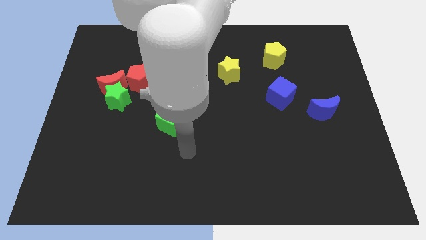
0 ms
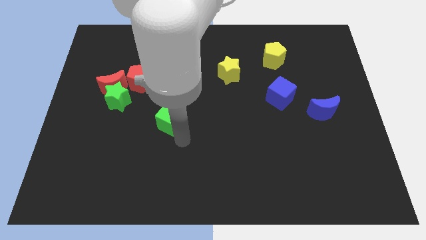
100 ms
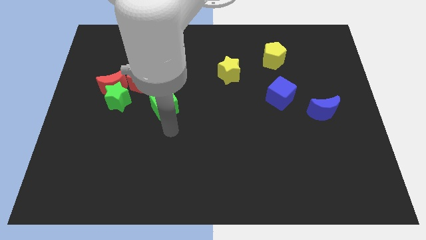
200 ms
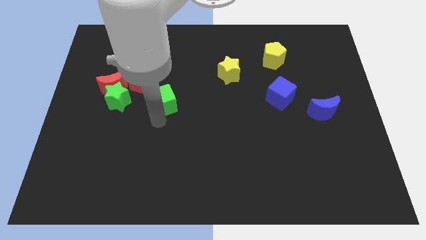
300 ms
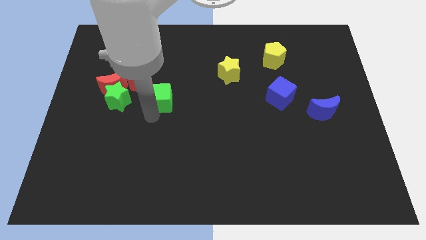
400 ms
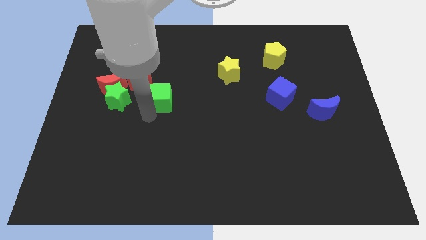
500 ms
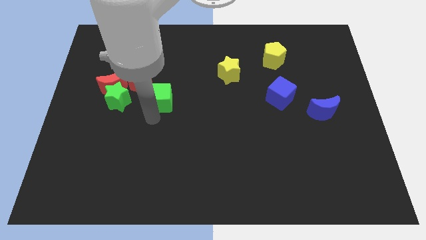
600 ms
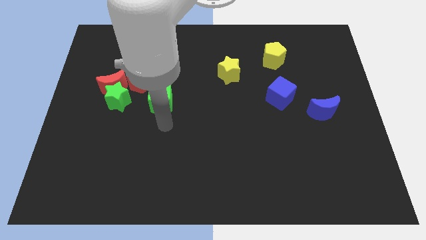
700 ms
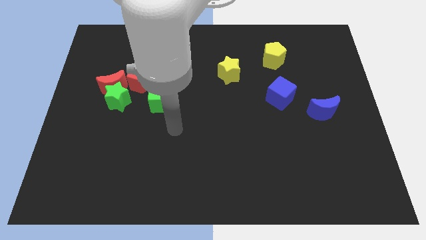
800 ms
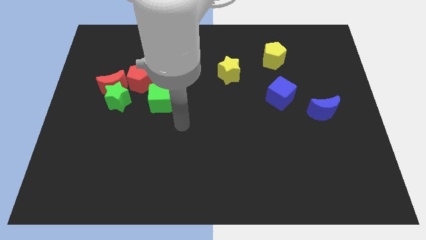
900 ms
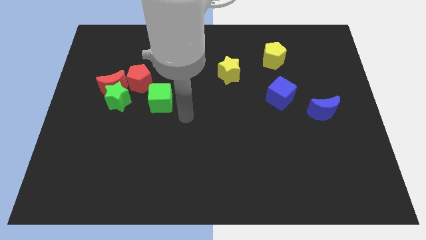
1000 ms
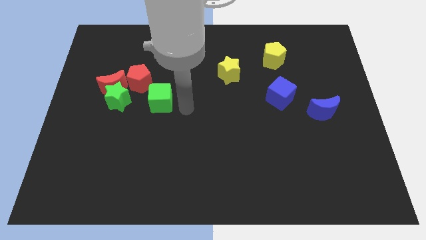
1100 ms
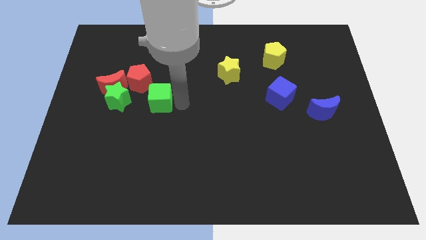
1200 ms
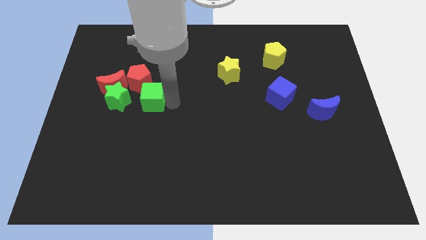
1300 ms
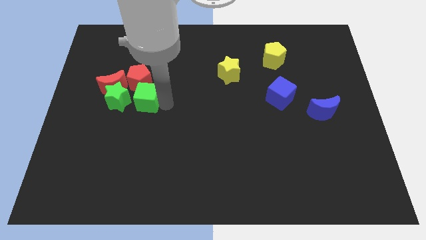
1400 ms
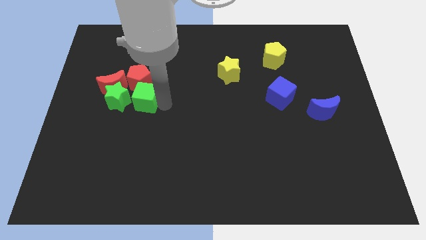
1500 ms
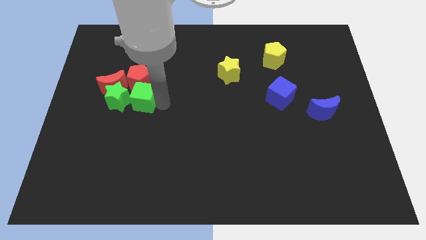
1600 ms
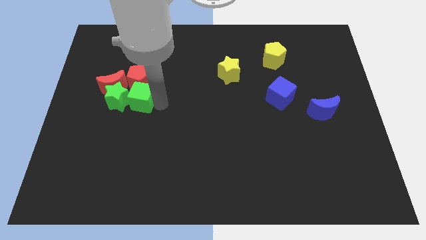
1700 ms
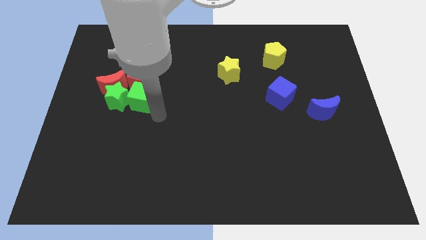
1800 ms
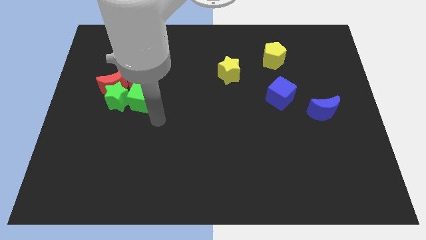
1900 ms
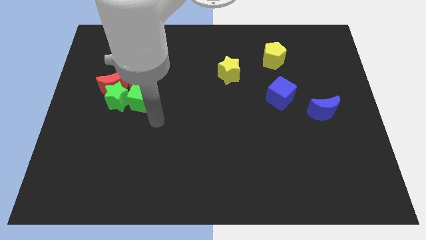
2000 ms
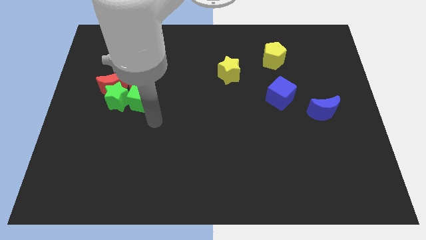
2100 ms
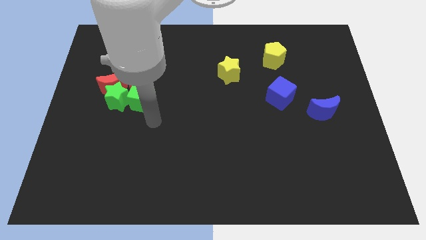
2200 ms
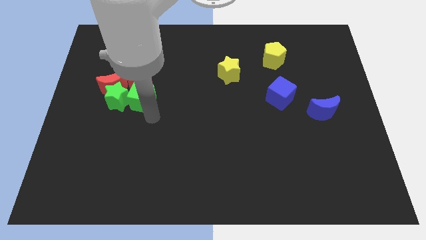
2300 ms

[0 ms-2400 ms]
slide the green cube into the bottom of red pentagon

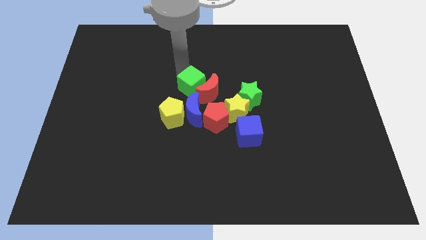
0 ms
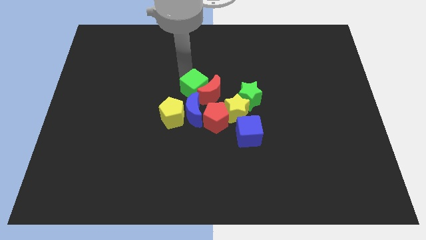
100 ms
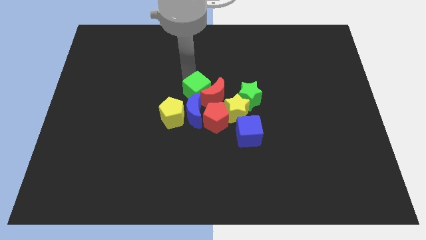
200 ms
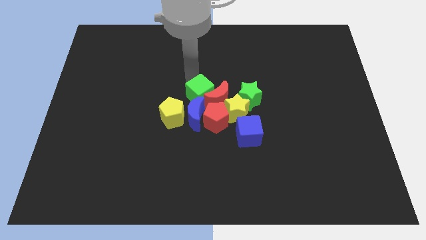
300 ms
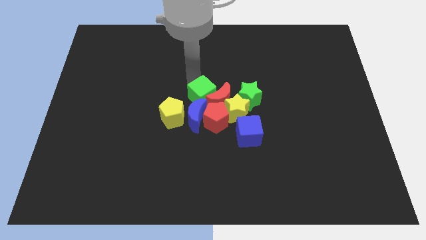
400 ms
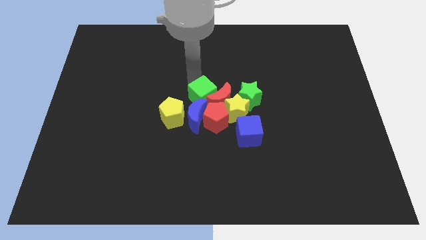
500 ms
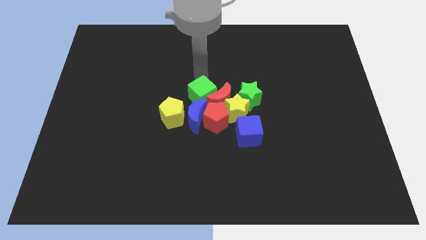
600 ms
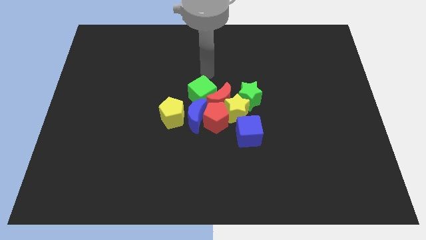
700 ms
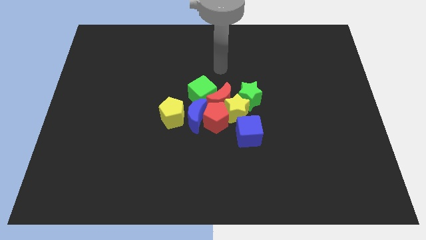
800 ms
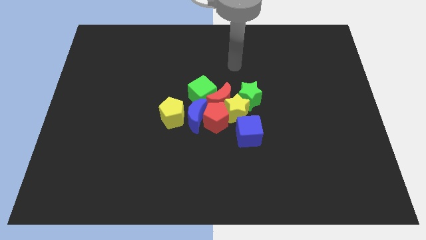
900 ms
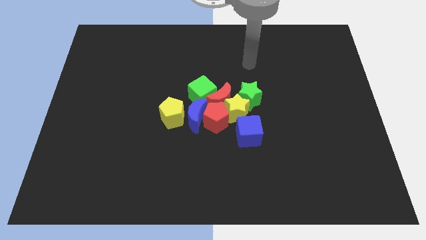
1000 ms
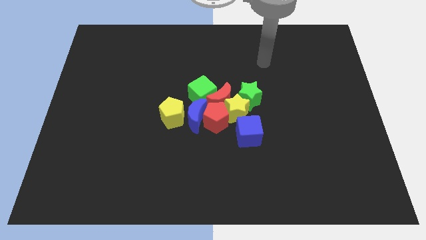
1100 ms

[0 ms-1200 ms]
push the red crescent to the top of the blue crescent along with the red crescent

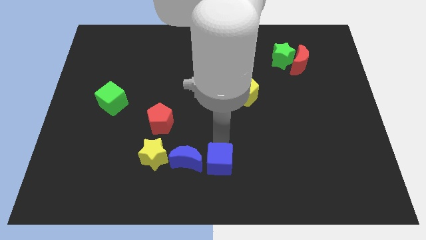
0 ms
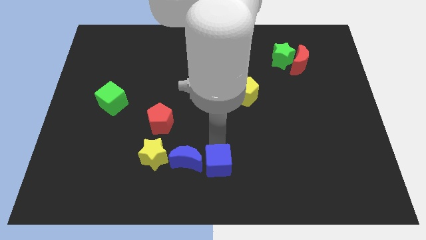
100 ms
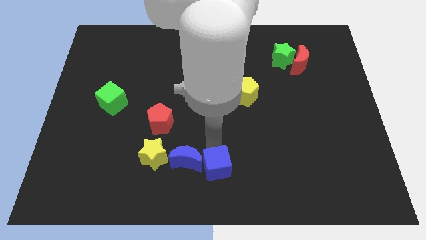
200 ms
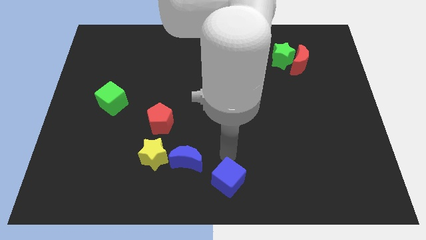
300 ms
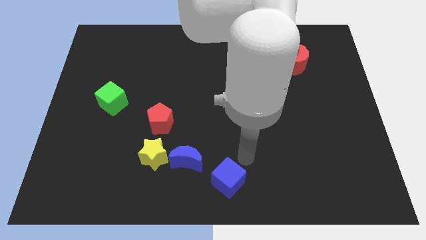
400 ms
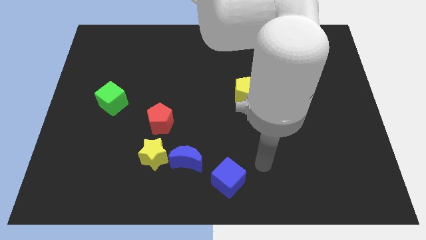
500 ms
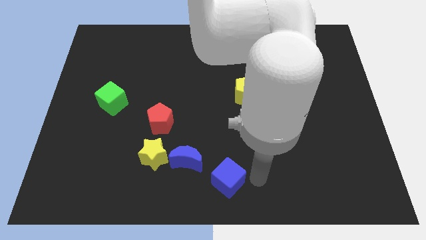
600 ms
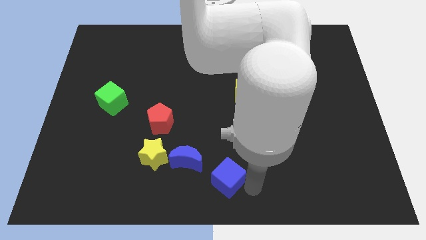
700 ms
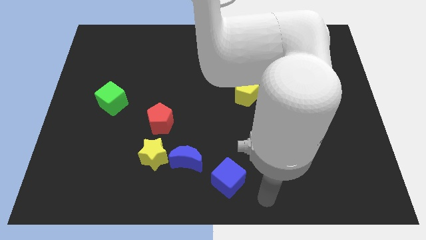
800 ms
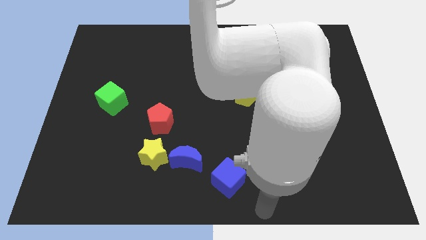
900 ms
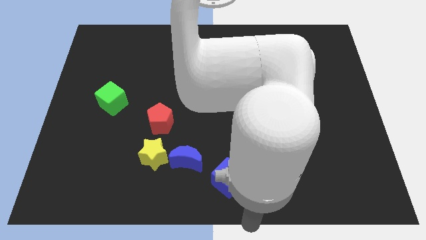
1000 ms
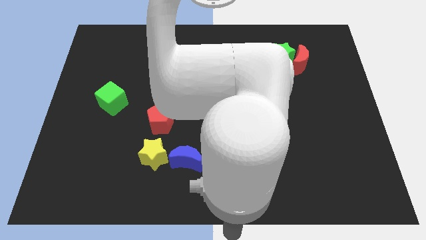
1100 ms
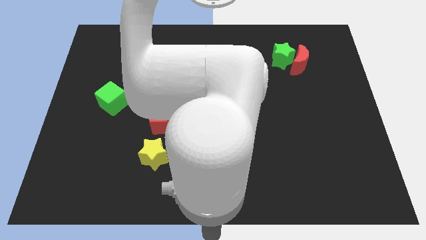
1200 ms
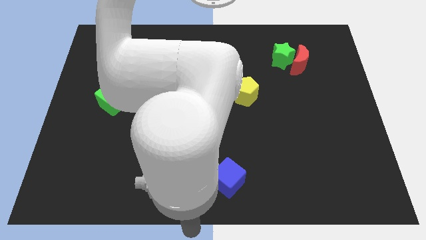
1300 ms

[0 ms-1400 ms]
separate blue cube from blue crescent

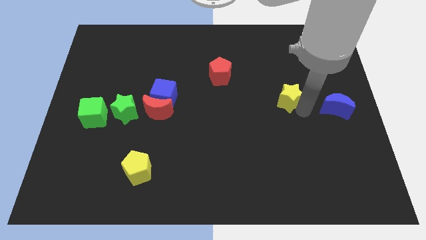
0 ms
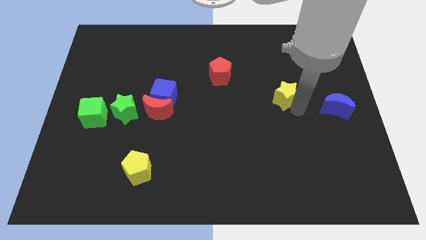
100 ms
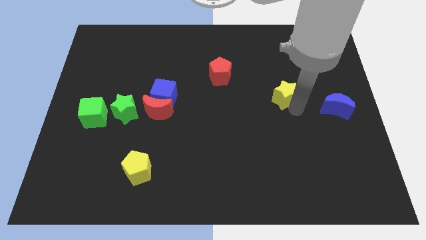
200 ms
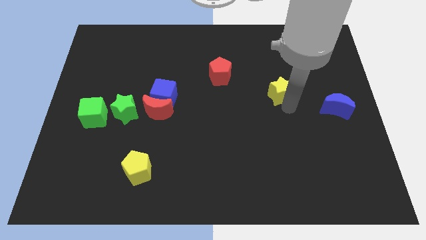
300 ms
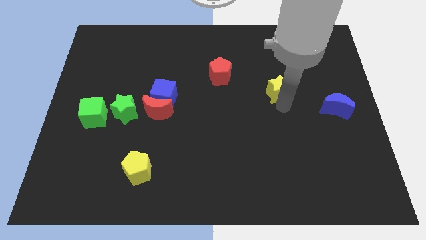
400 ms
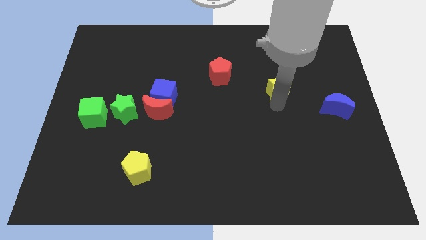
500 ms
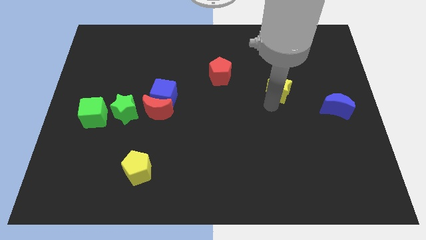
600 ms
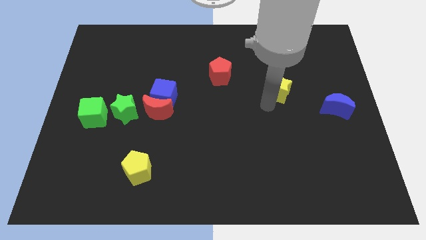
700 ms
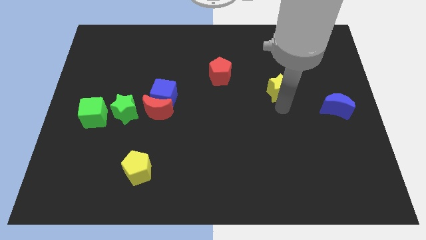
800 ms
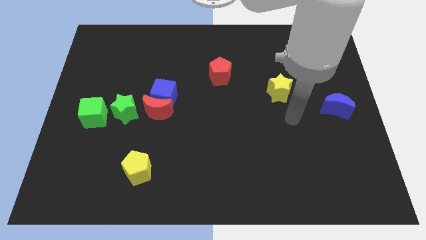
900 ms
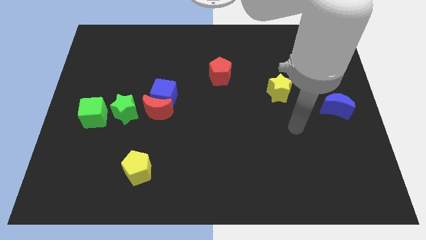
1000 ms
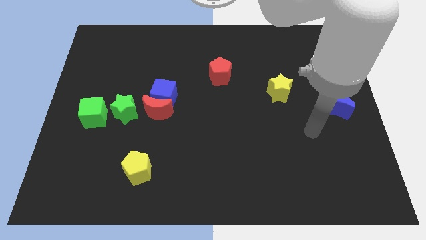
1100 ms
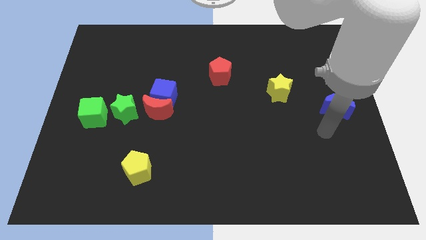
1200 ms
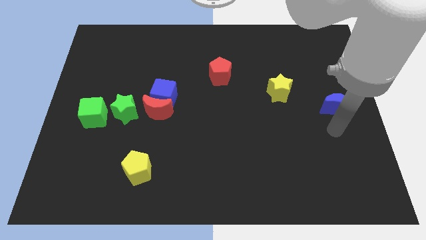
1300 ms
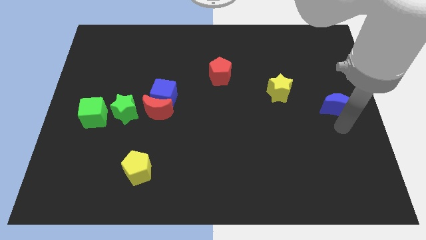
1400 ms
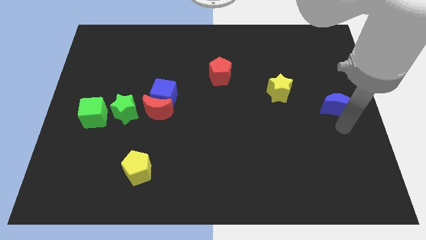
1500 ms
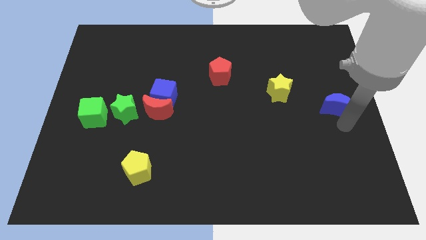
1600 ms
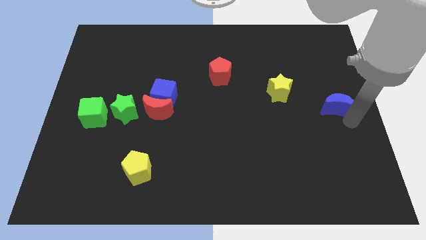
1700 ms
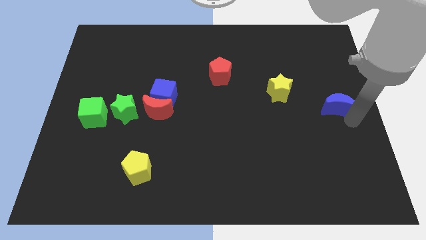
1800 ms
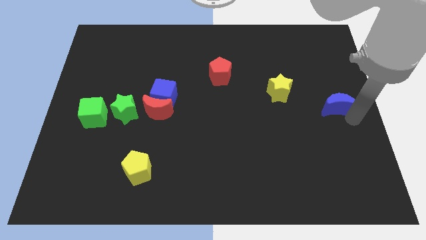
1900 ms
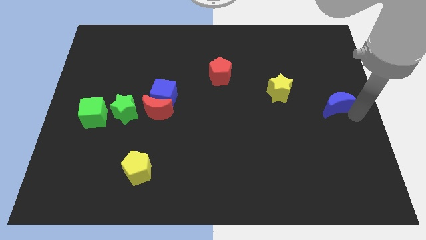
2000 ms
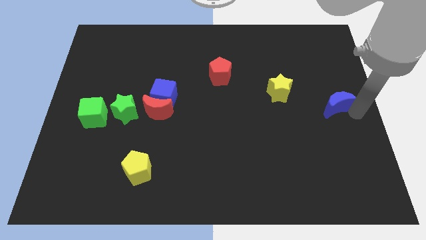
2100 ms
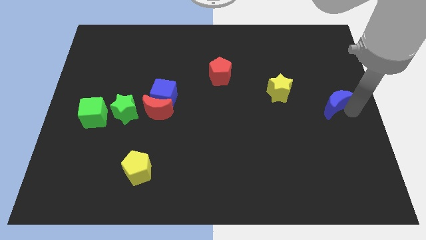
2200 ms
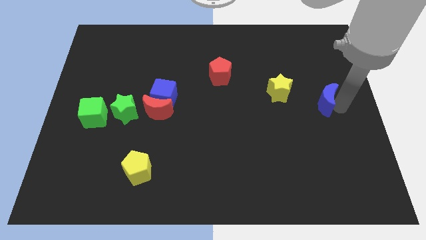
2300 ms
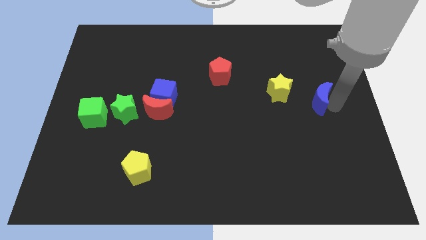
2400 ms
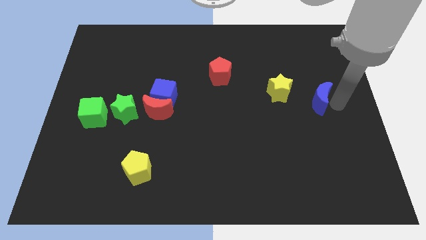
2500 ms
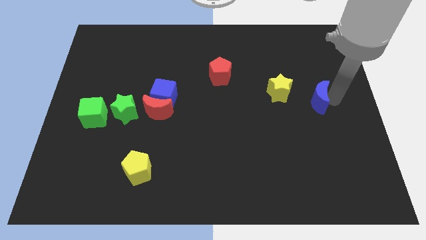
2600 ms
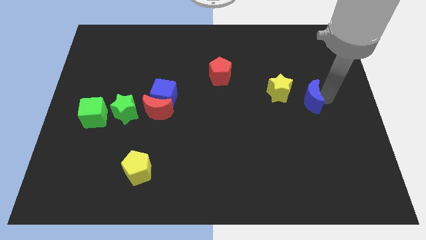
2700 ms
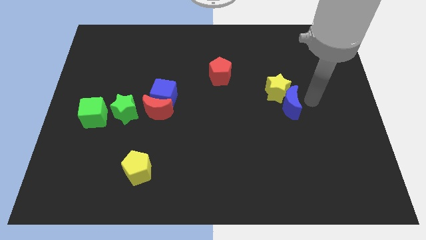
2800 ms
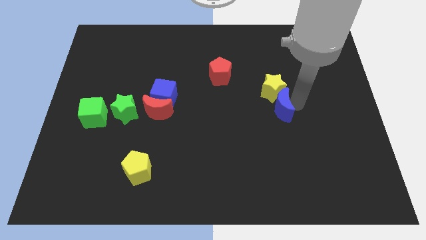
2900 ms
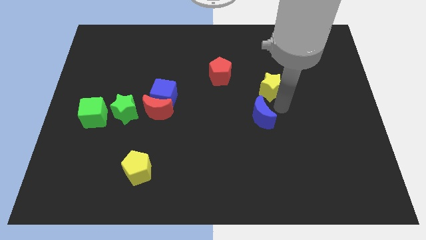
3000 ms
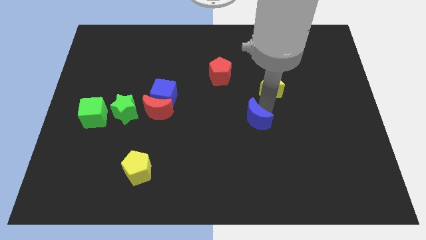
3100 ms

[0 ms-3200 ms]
place the blue moon below to the yellow star

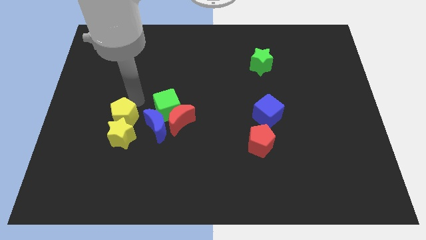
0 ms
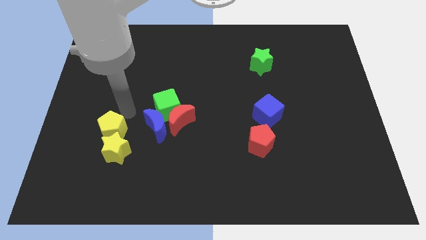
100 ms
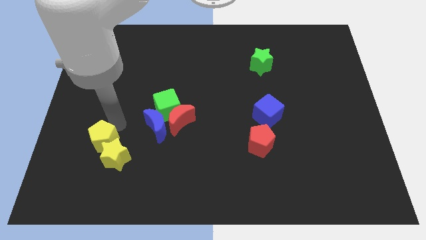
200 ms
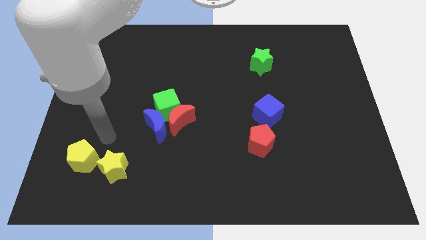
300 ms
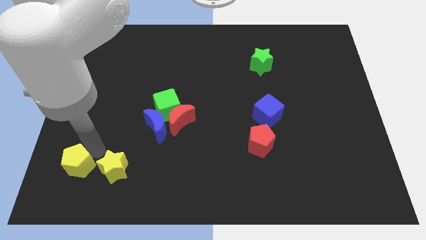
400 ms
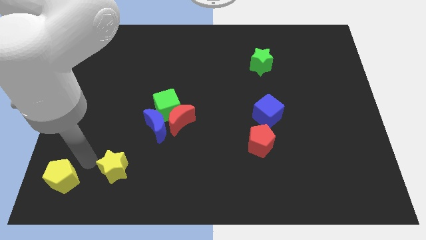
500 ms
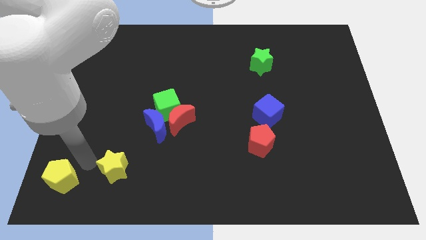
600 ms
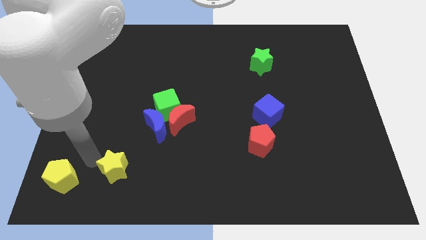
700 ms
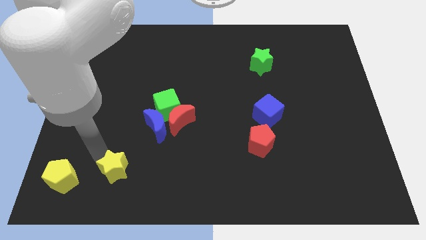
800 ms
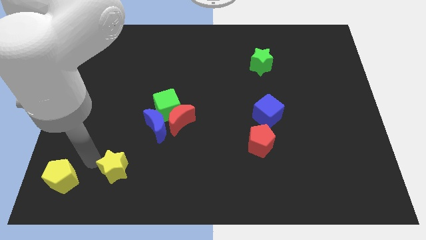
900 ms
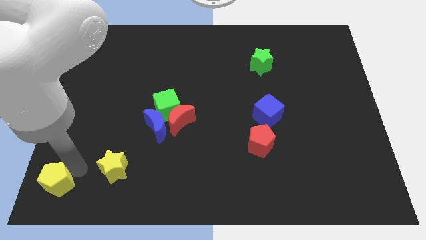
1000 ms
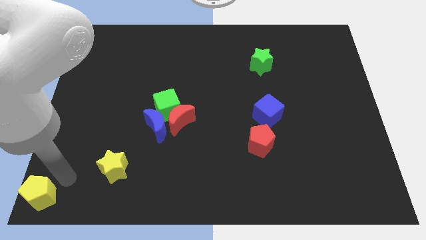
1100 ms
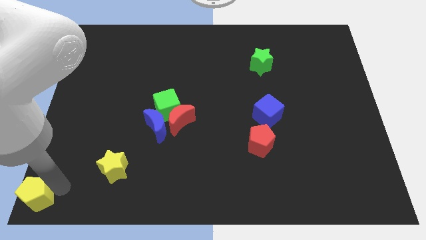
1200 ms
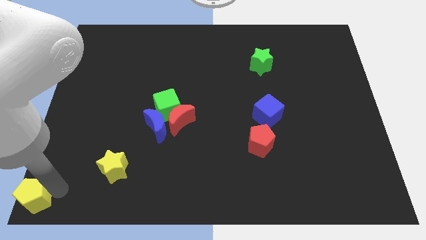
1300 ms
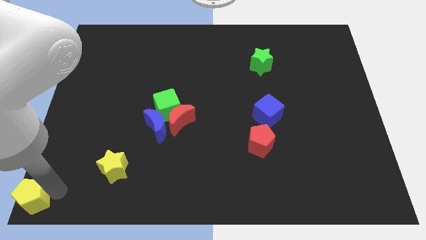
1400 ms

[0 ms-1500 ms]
separate yellow pentagon from the yellow star
